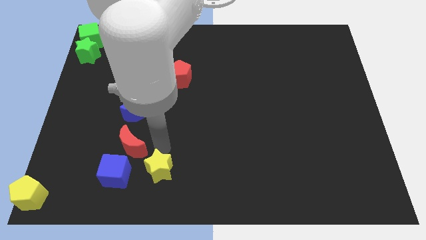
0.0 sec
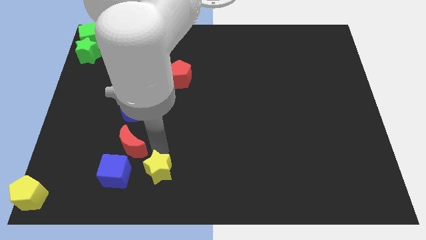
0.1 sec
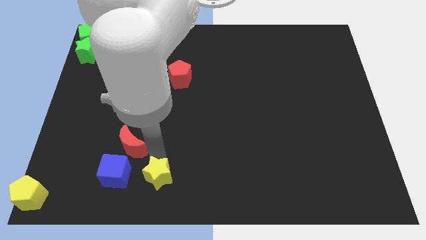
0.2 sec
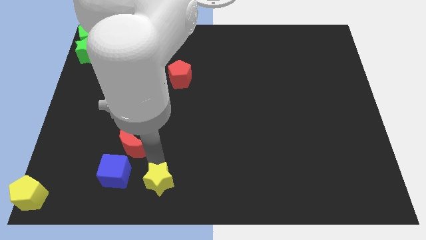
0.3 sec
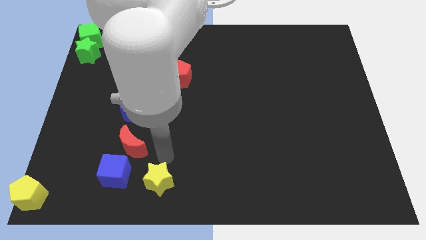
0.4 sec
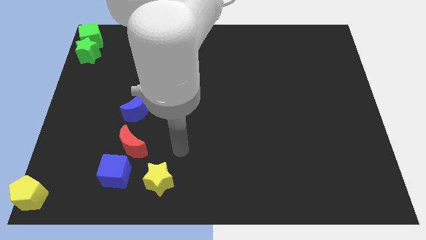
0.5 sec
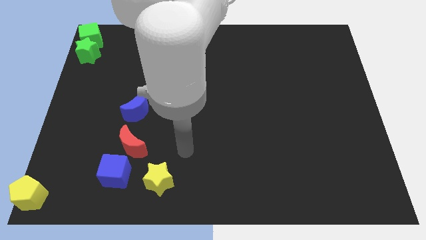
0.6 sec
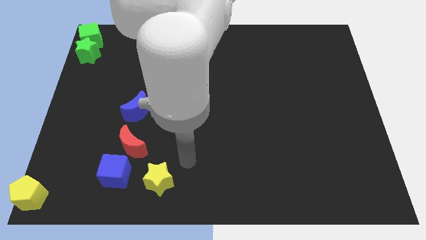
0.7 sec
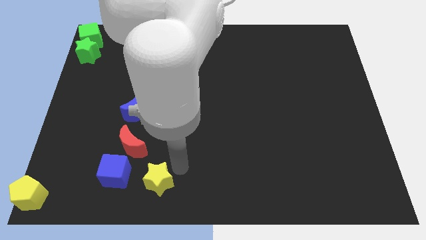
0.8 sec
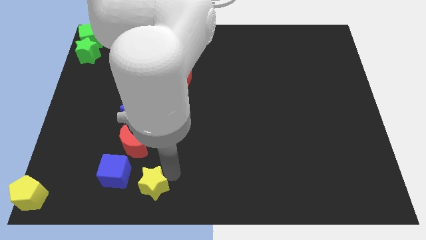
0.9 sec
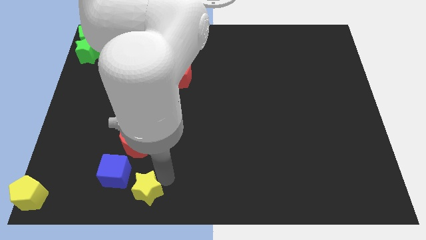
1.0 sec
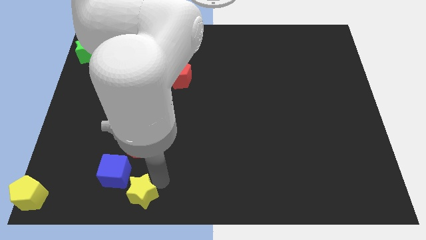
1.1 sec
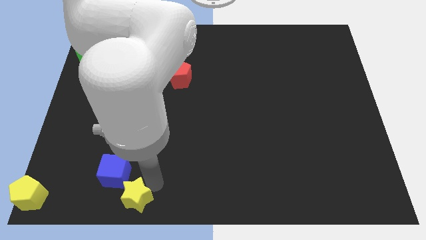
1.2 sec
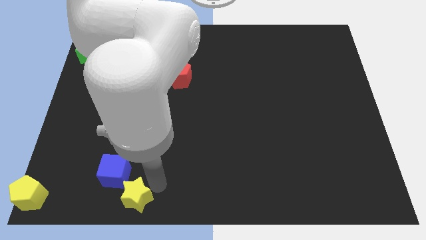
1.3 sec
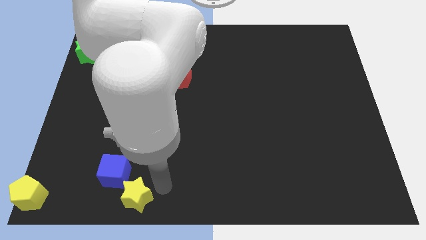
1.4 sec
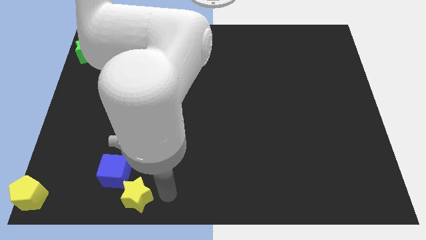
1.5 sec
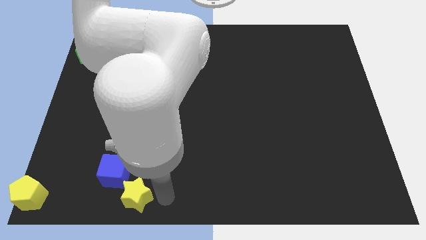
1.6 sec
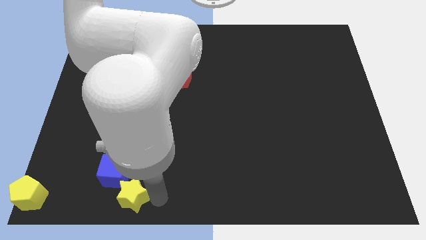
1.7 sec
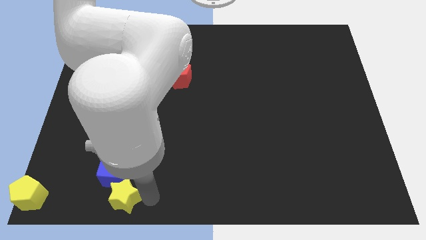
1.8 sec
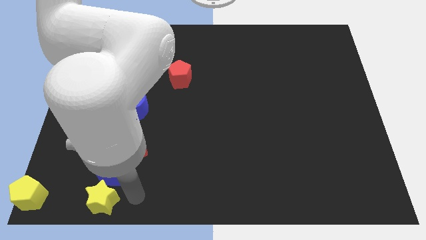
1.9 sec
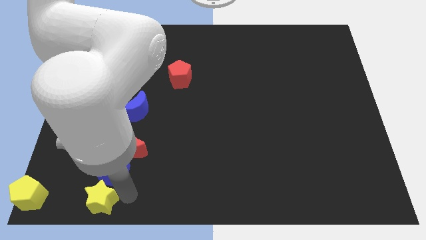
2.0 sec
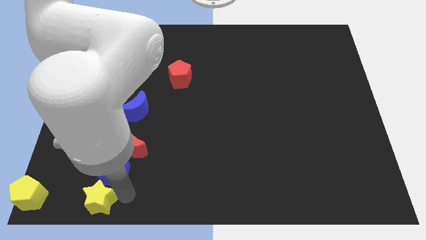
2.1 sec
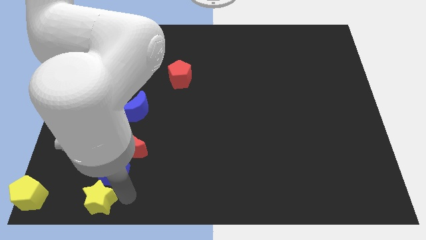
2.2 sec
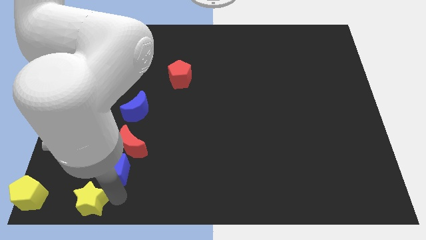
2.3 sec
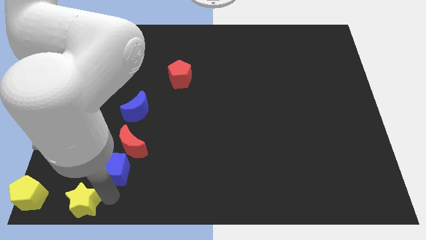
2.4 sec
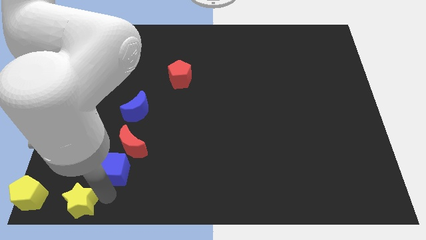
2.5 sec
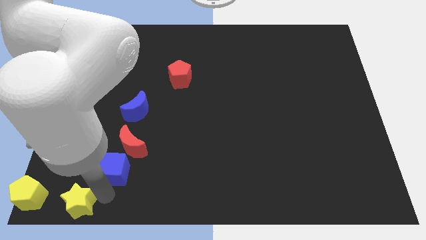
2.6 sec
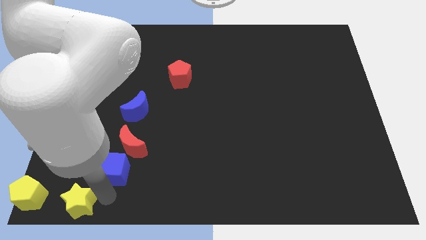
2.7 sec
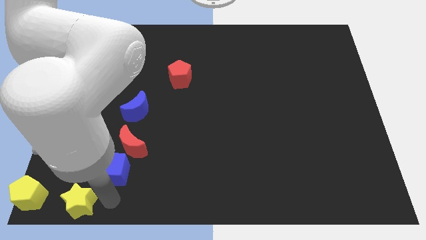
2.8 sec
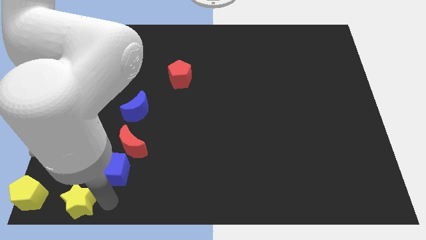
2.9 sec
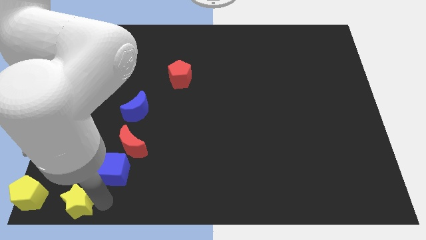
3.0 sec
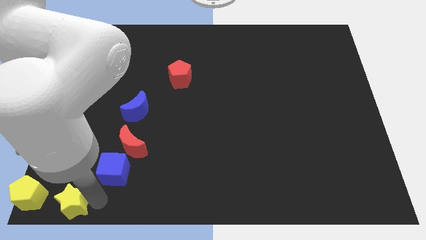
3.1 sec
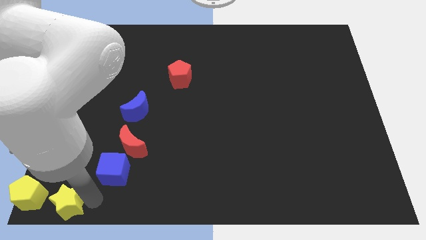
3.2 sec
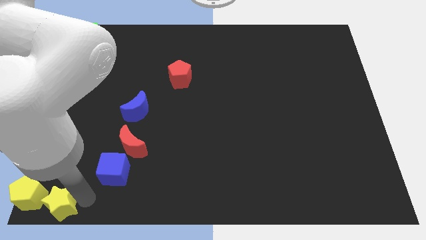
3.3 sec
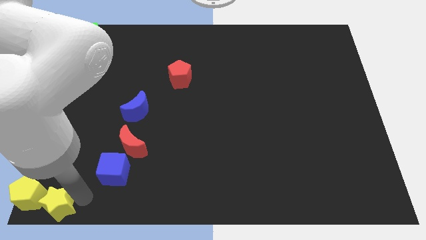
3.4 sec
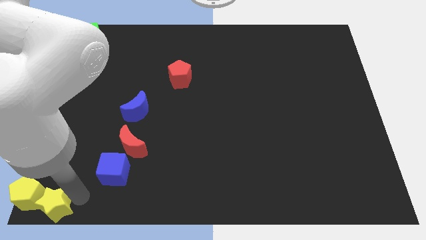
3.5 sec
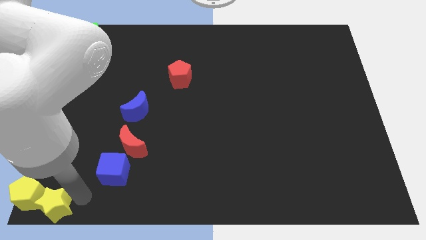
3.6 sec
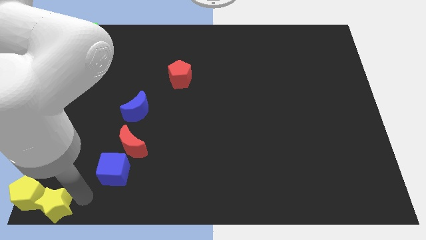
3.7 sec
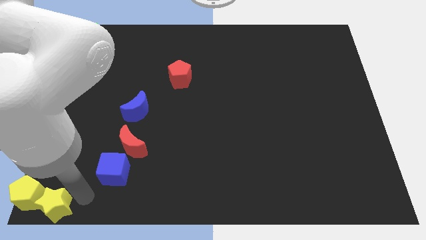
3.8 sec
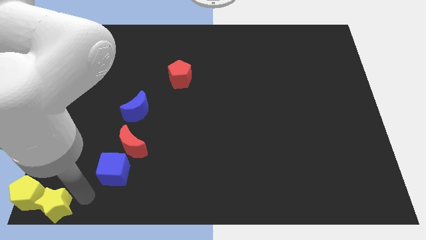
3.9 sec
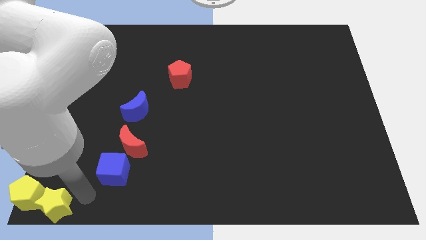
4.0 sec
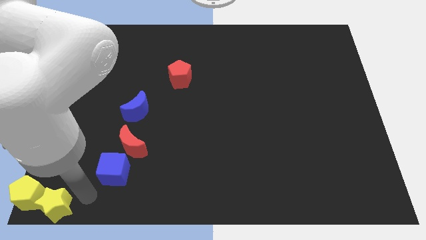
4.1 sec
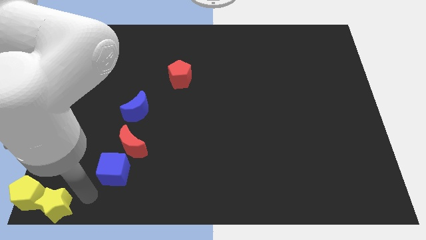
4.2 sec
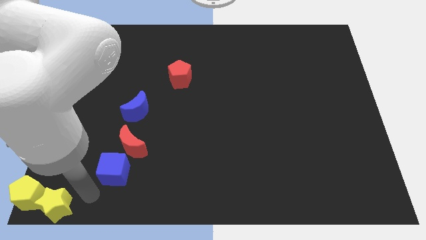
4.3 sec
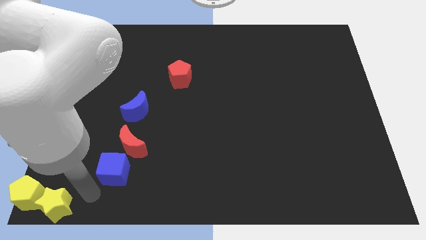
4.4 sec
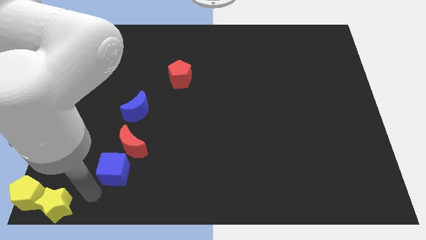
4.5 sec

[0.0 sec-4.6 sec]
move the yellow star to the right of the yellow pentagon

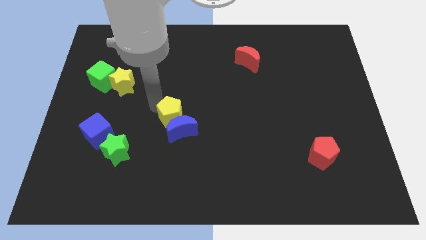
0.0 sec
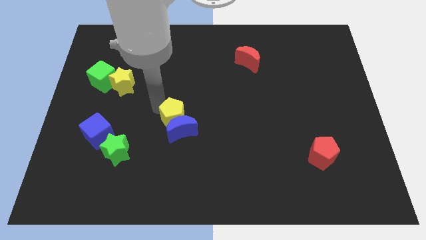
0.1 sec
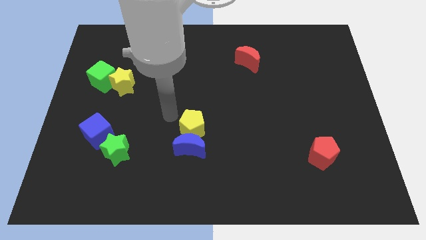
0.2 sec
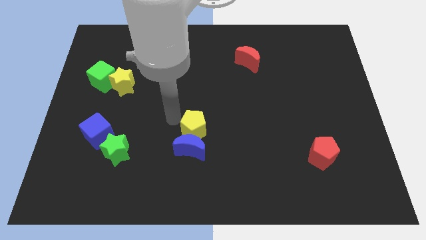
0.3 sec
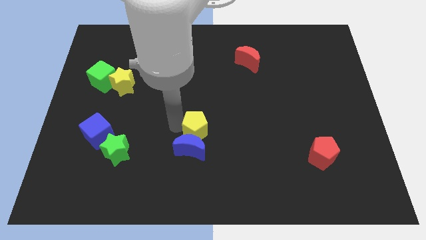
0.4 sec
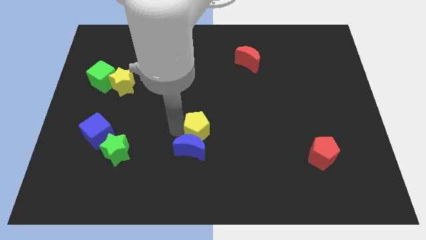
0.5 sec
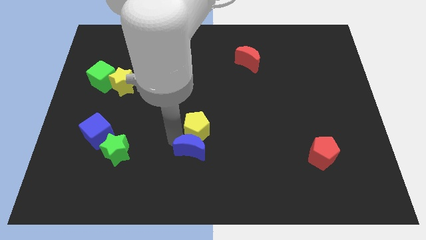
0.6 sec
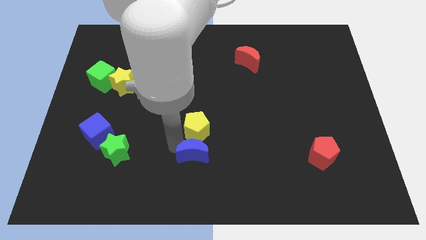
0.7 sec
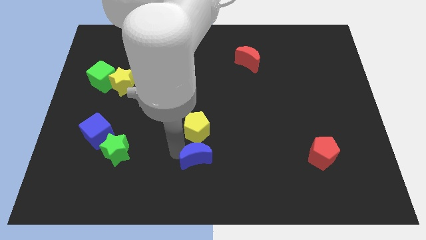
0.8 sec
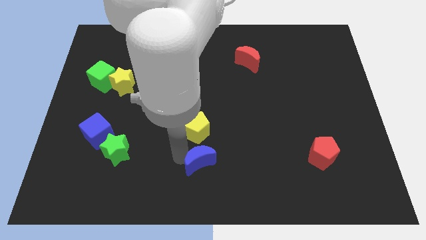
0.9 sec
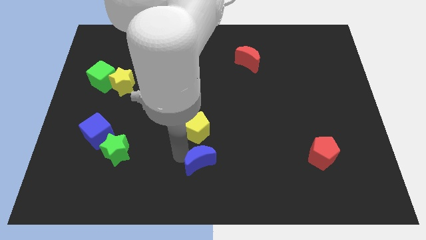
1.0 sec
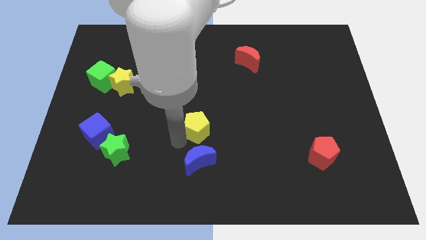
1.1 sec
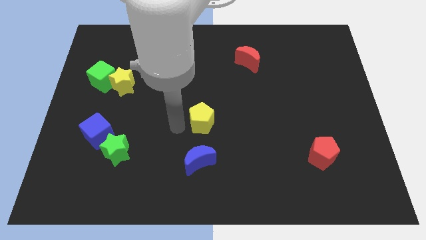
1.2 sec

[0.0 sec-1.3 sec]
separate the yellow pentagon and the blue crescent

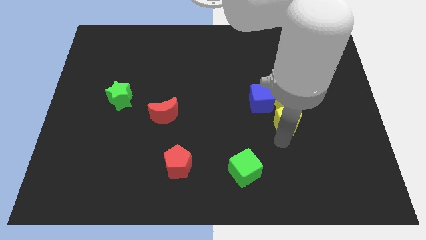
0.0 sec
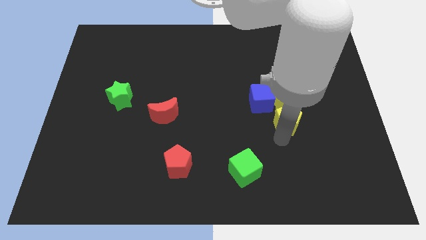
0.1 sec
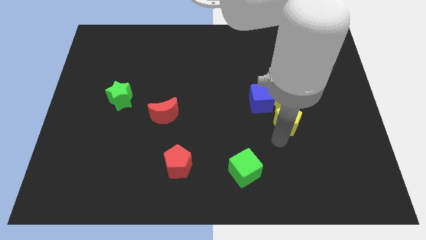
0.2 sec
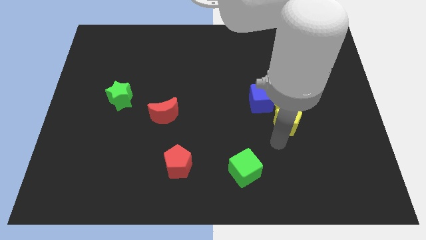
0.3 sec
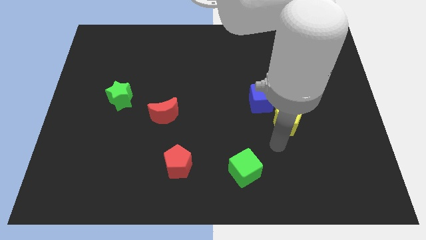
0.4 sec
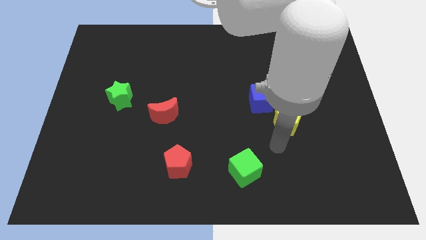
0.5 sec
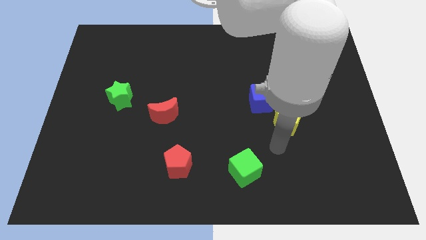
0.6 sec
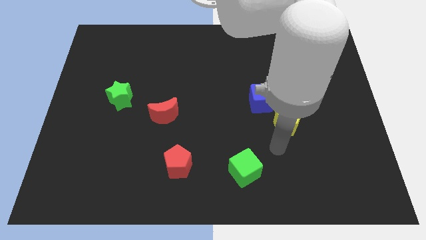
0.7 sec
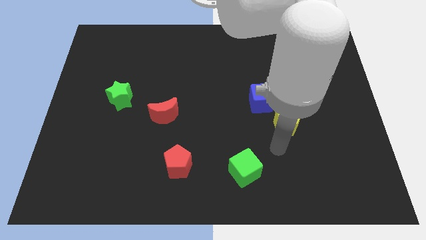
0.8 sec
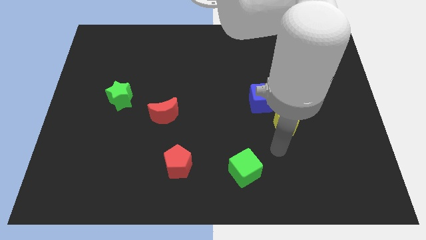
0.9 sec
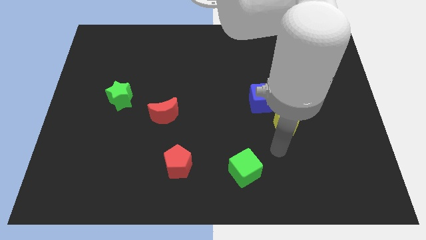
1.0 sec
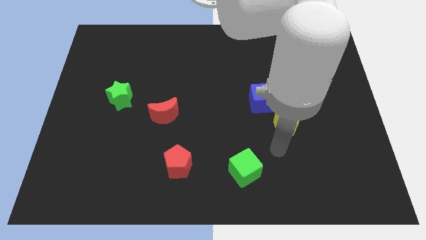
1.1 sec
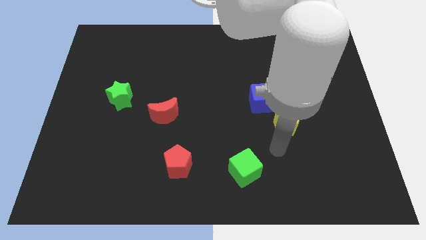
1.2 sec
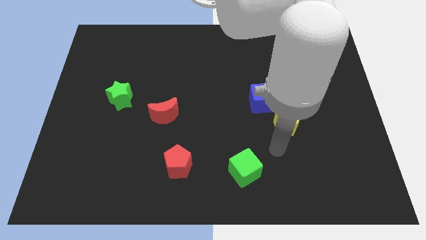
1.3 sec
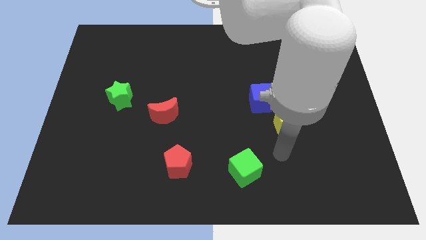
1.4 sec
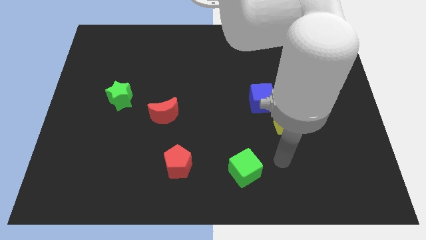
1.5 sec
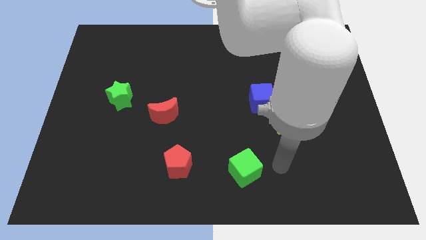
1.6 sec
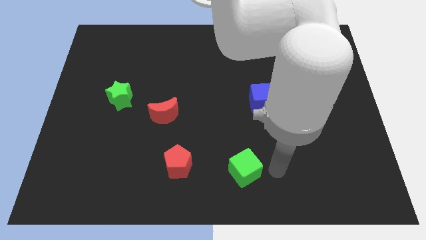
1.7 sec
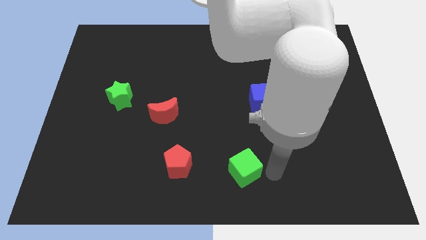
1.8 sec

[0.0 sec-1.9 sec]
place the arm close to the green cube

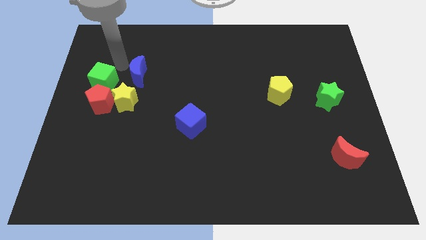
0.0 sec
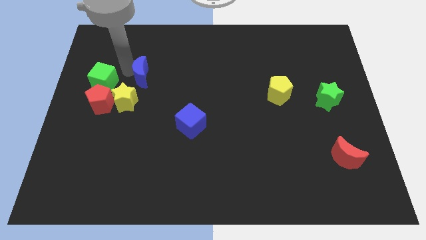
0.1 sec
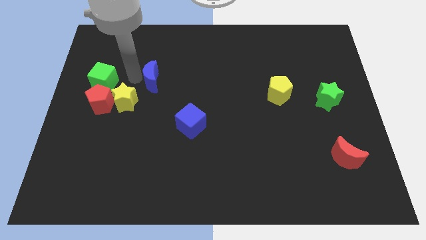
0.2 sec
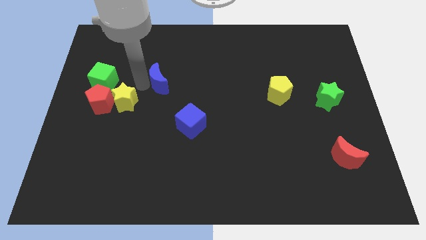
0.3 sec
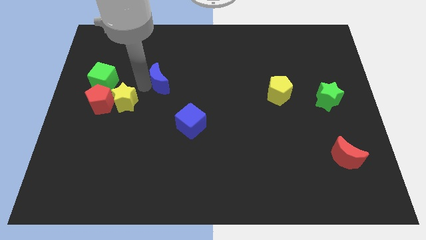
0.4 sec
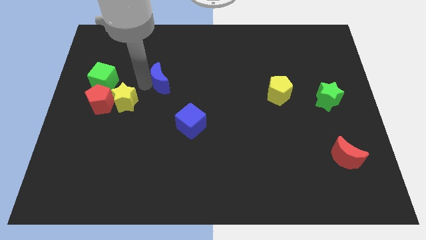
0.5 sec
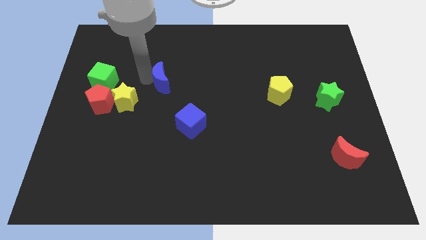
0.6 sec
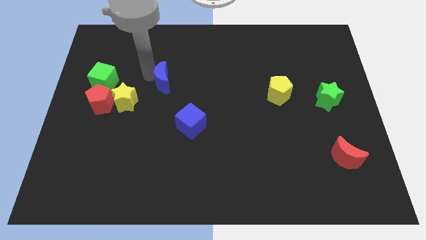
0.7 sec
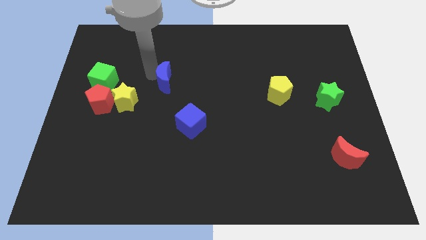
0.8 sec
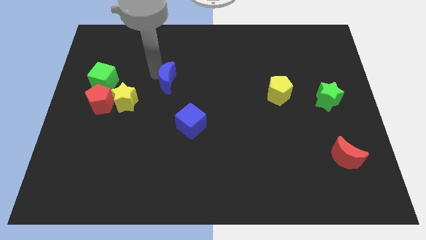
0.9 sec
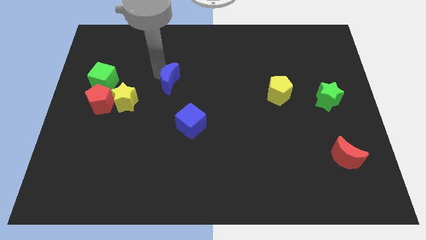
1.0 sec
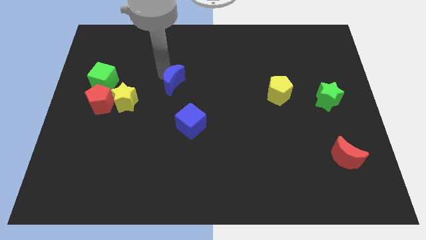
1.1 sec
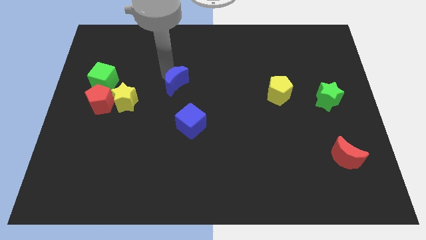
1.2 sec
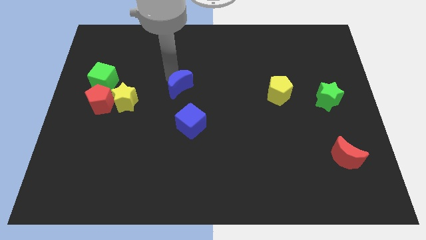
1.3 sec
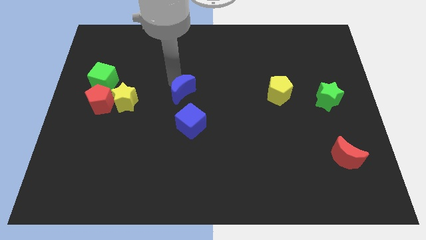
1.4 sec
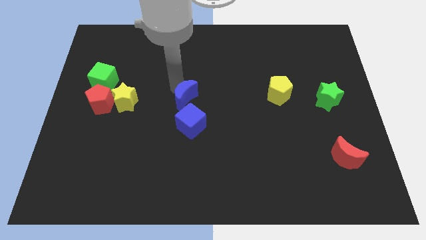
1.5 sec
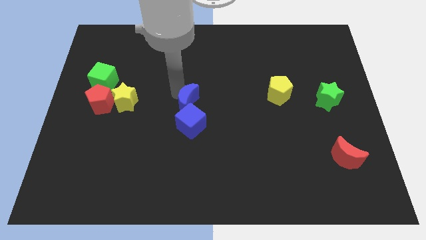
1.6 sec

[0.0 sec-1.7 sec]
place the blue crescent to the right of the yellow star
